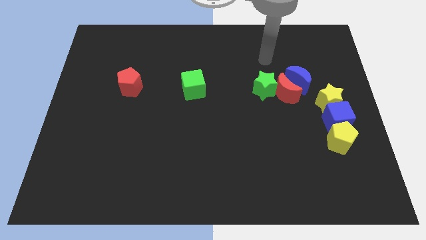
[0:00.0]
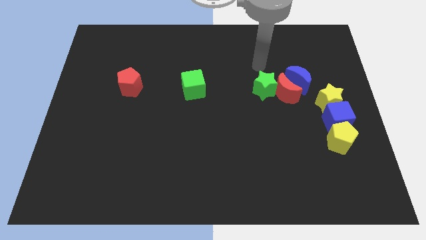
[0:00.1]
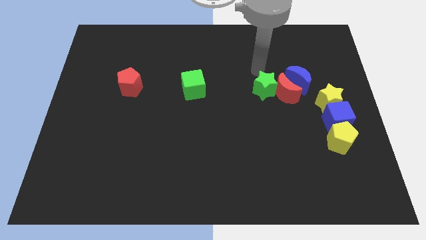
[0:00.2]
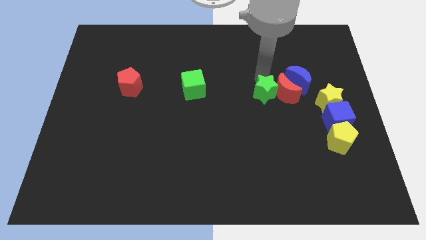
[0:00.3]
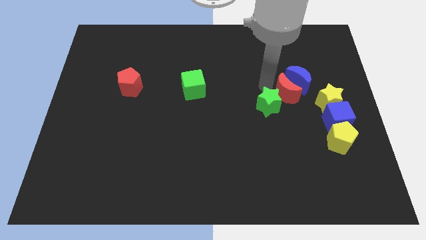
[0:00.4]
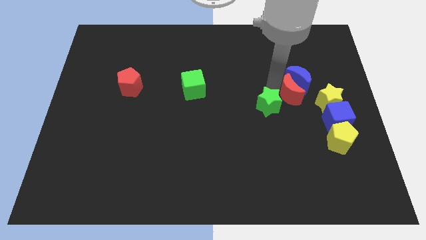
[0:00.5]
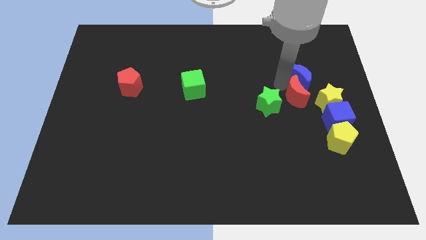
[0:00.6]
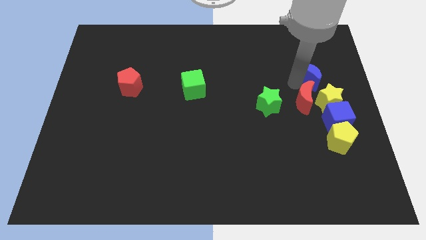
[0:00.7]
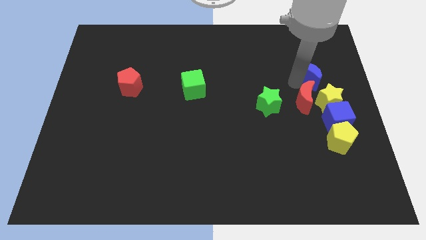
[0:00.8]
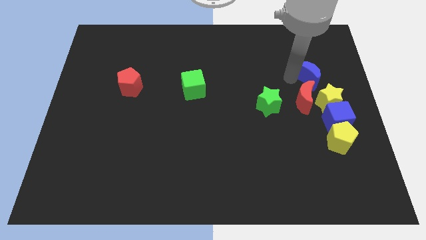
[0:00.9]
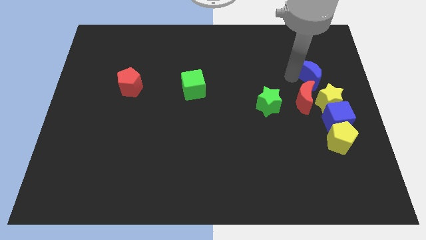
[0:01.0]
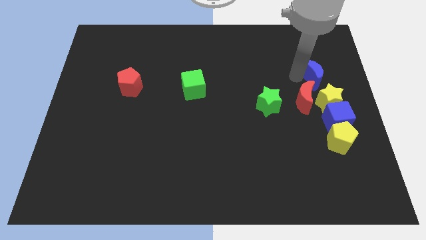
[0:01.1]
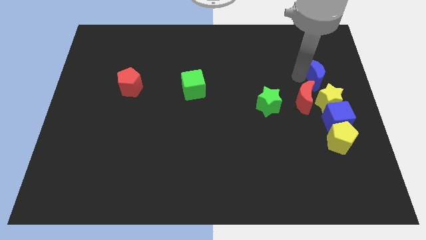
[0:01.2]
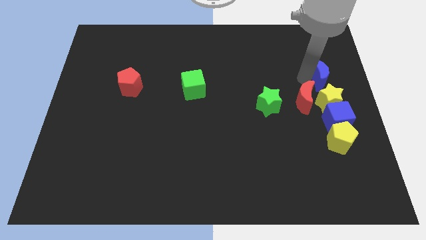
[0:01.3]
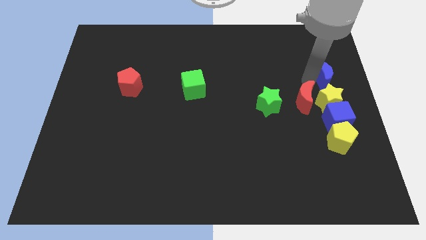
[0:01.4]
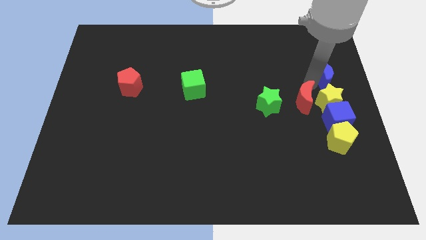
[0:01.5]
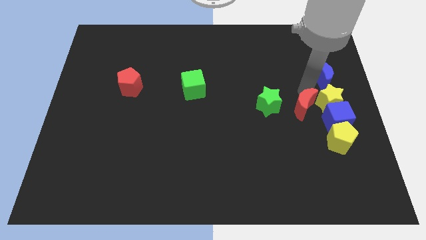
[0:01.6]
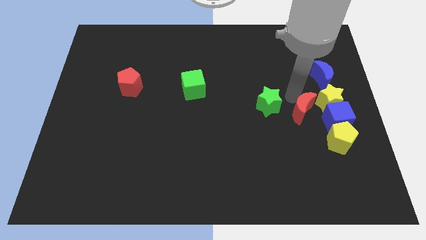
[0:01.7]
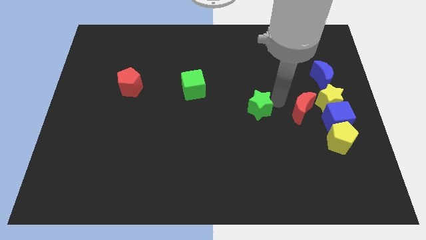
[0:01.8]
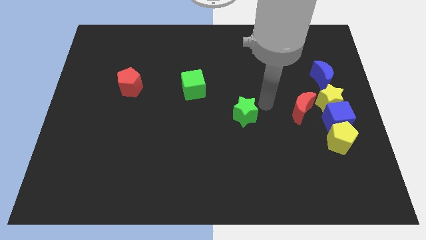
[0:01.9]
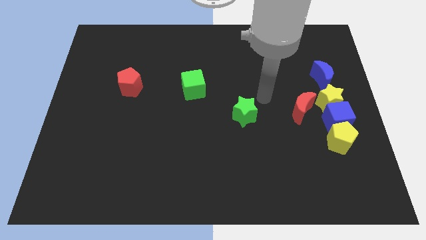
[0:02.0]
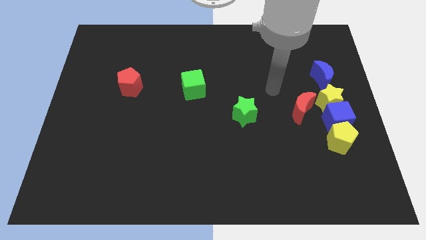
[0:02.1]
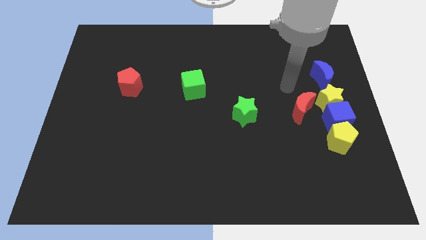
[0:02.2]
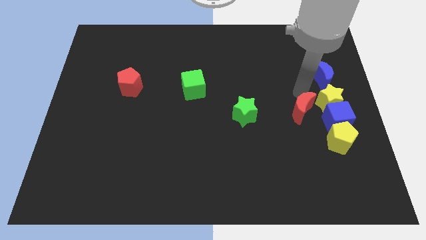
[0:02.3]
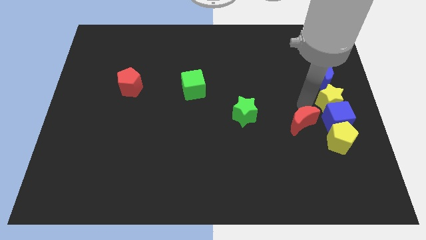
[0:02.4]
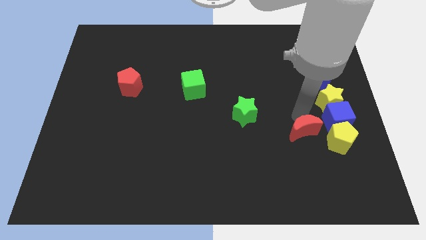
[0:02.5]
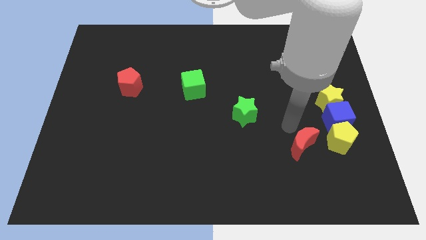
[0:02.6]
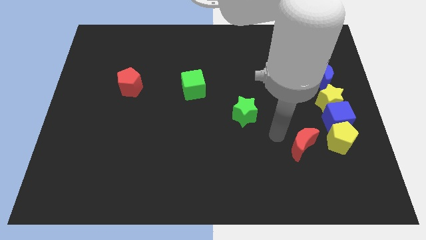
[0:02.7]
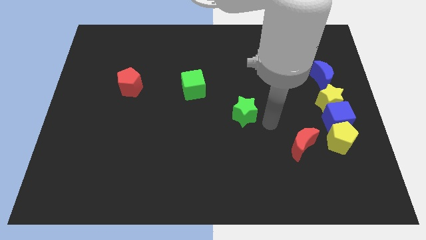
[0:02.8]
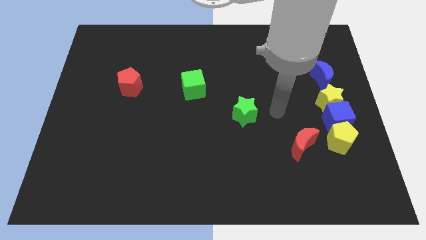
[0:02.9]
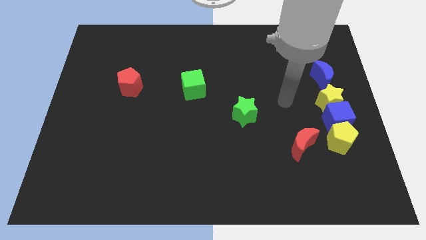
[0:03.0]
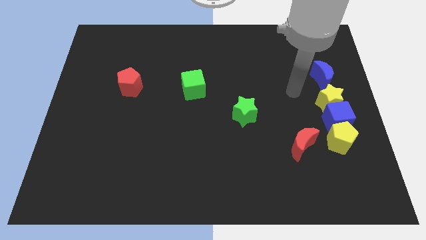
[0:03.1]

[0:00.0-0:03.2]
separate the green star red crescent and blue crescent

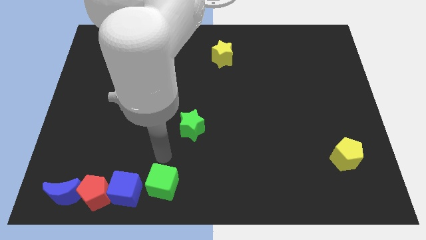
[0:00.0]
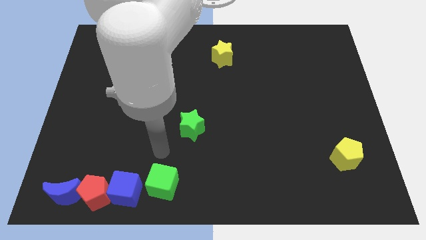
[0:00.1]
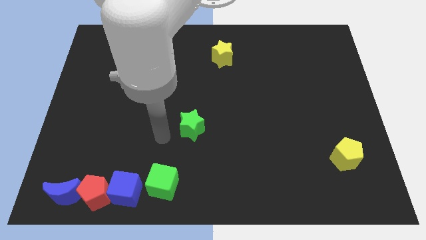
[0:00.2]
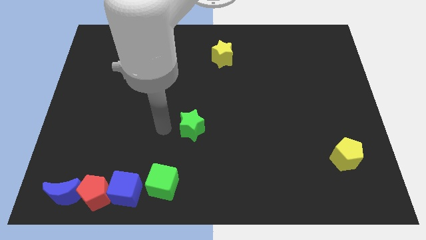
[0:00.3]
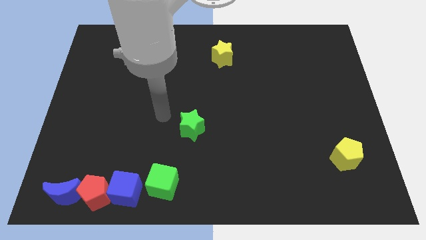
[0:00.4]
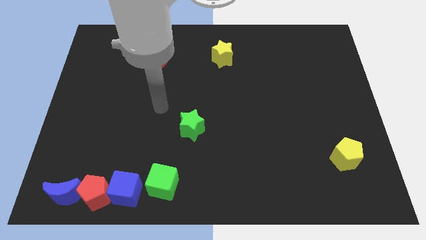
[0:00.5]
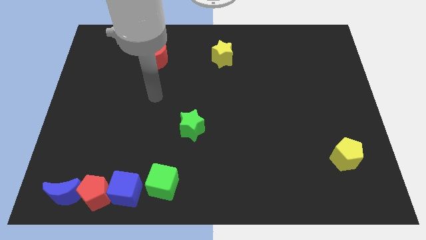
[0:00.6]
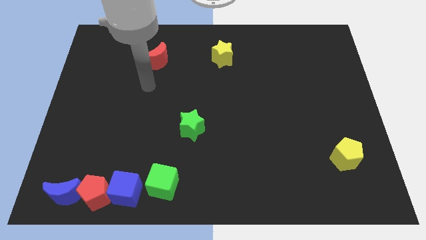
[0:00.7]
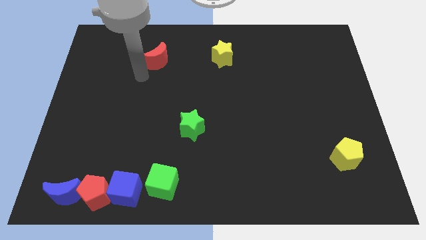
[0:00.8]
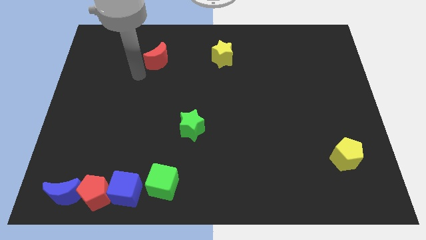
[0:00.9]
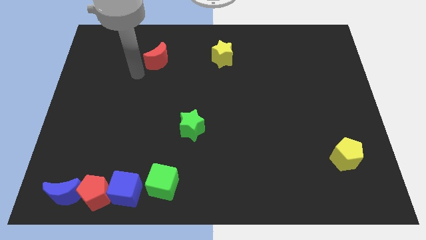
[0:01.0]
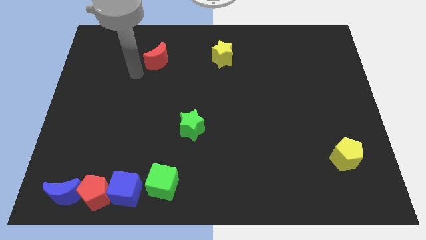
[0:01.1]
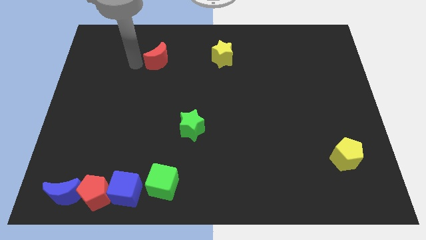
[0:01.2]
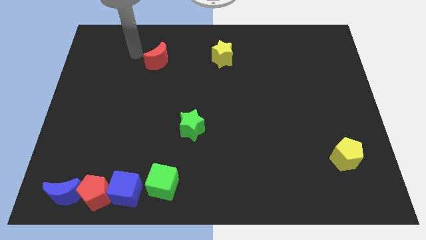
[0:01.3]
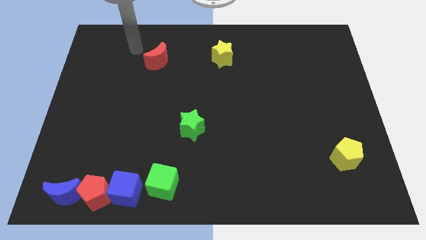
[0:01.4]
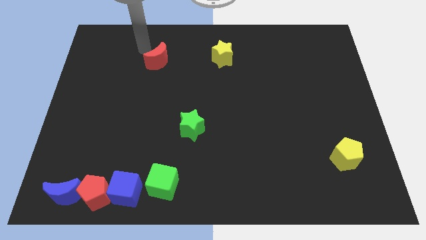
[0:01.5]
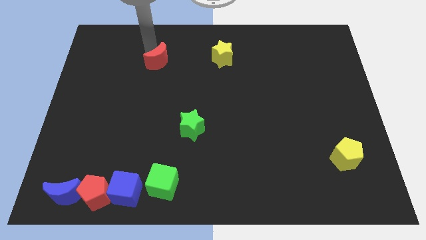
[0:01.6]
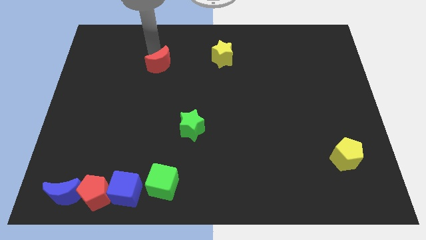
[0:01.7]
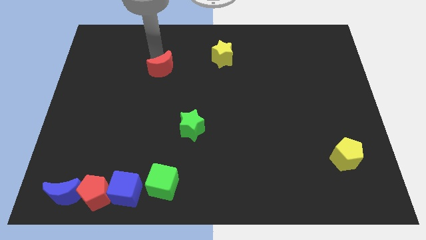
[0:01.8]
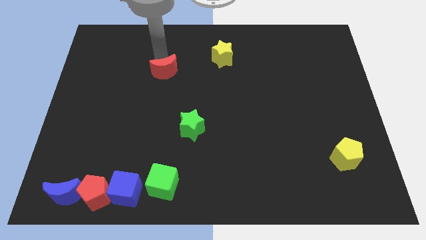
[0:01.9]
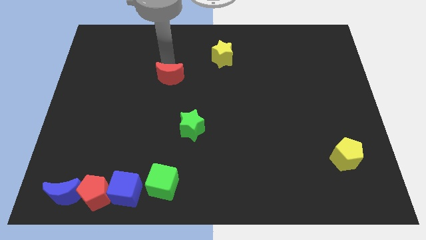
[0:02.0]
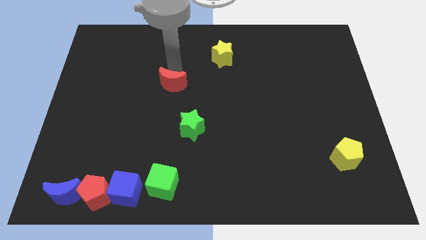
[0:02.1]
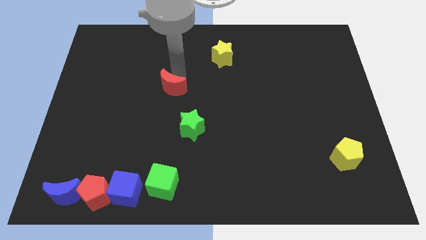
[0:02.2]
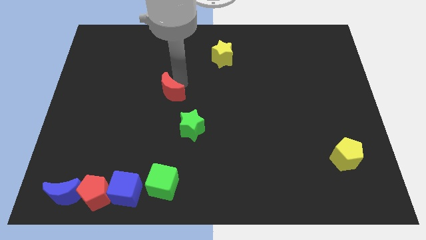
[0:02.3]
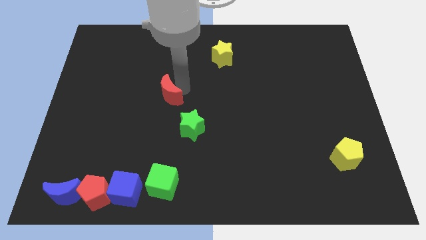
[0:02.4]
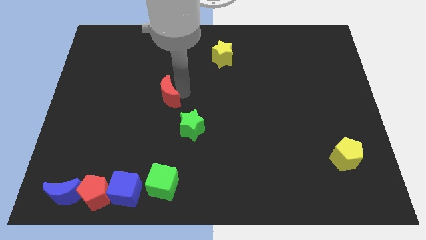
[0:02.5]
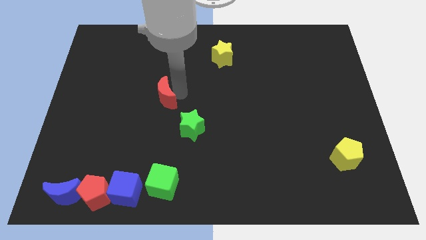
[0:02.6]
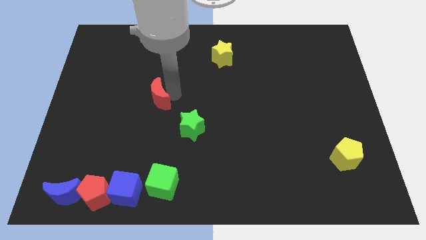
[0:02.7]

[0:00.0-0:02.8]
move the red crescent diagonal above the green star

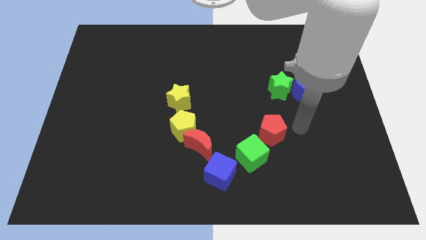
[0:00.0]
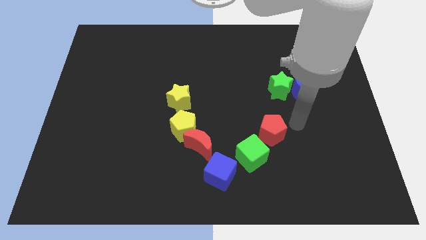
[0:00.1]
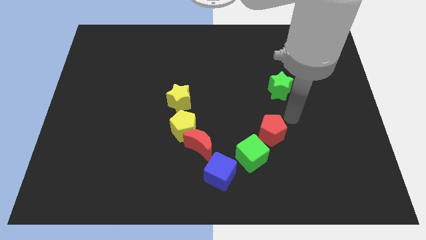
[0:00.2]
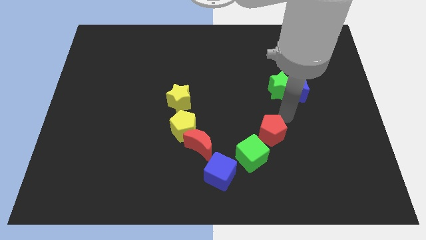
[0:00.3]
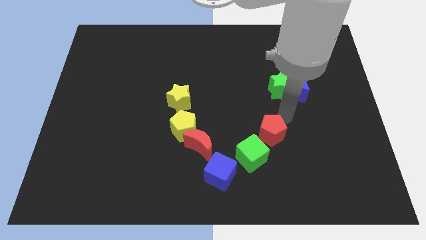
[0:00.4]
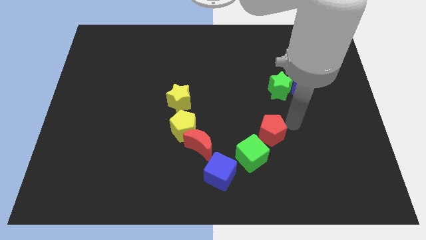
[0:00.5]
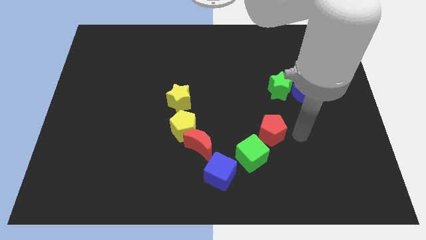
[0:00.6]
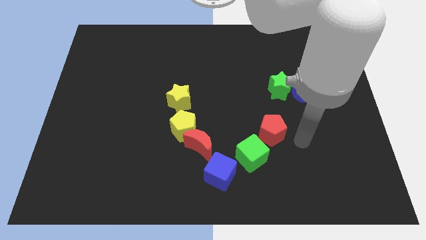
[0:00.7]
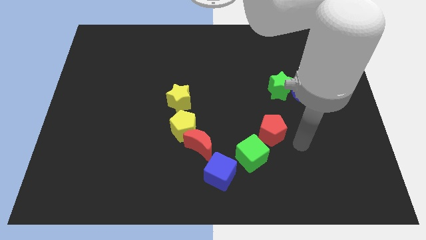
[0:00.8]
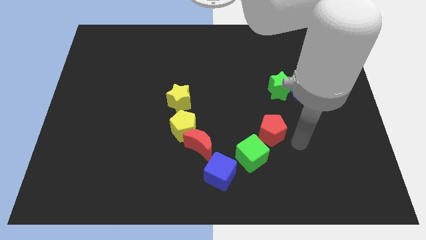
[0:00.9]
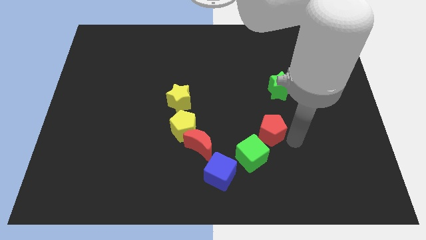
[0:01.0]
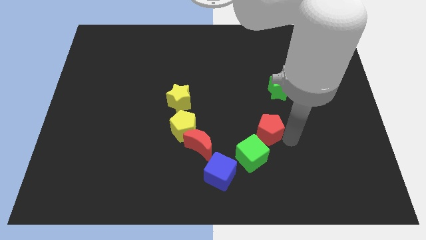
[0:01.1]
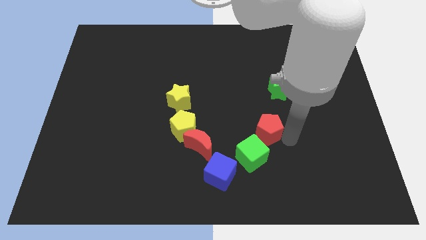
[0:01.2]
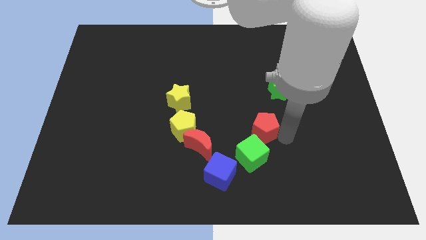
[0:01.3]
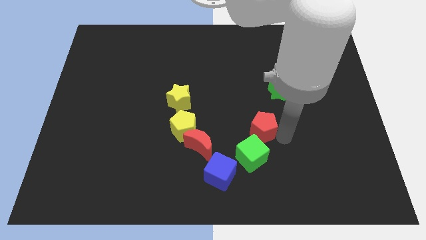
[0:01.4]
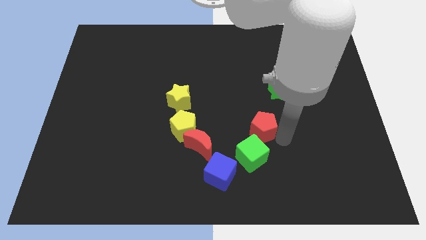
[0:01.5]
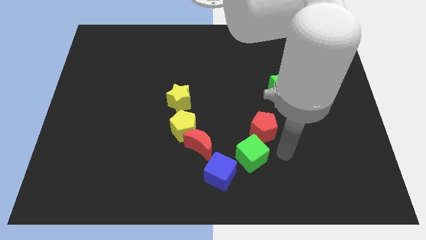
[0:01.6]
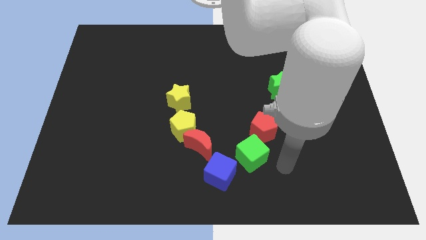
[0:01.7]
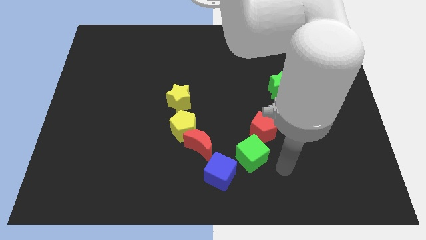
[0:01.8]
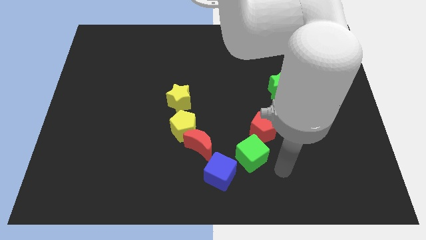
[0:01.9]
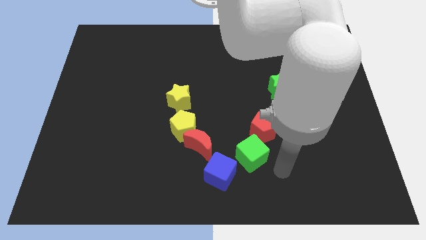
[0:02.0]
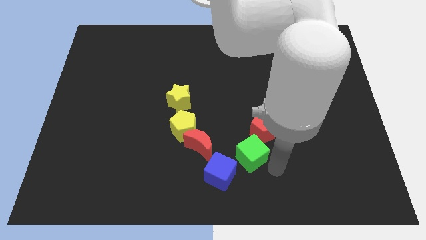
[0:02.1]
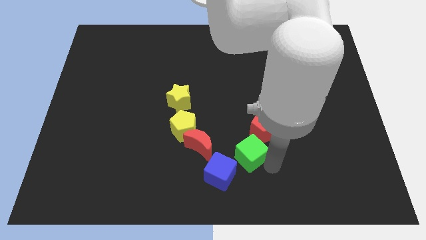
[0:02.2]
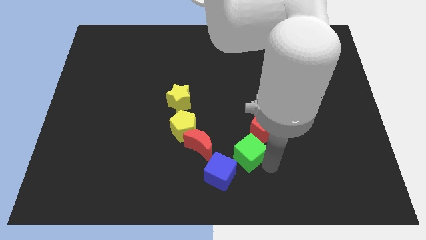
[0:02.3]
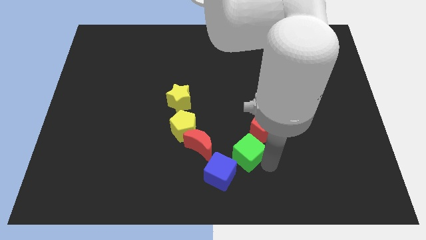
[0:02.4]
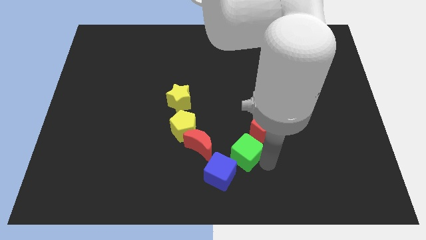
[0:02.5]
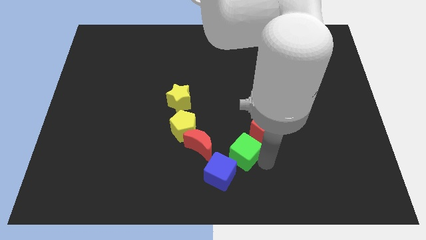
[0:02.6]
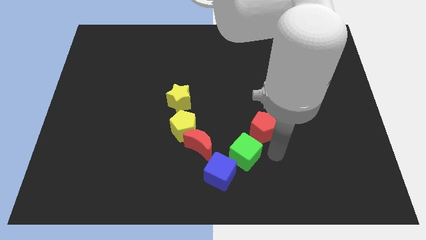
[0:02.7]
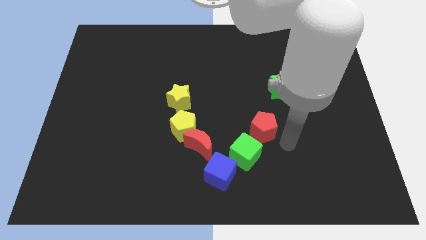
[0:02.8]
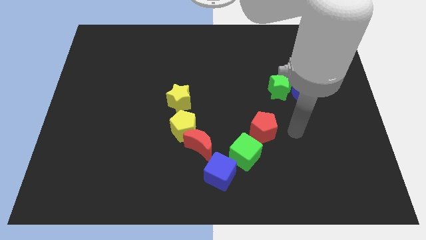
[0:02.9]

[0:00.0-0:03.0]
slightly move the green cube and red pentagon to the center of the table
